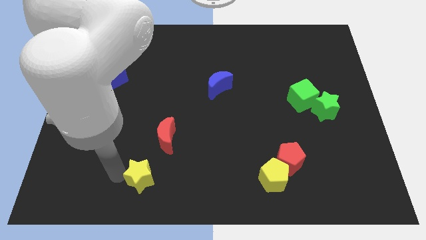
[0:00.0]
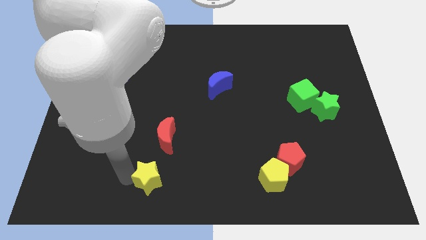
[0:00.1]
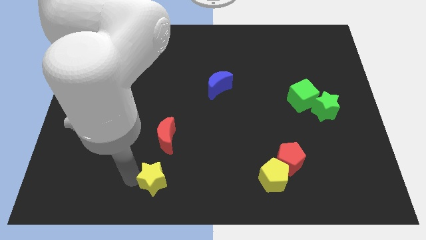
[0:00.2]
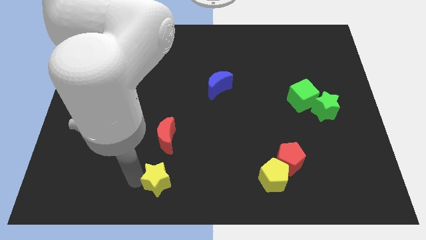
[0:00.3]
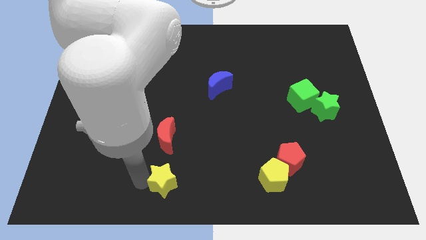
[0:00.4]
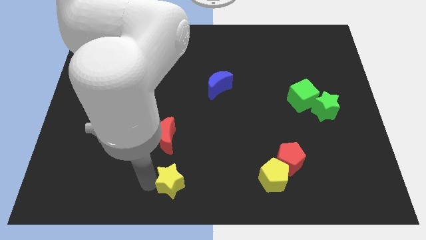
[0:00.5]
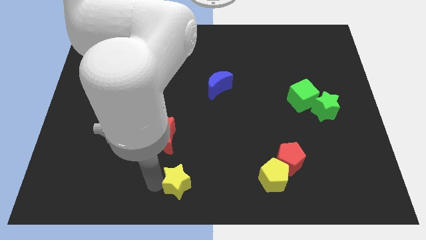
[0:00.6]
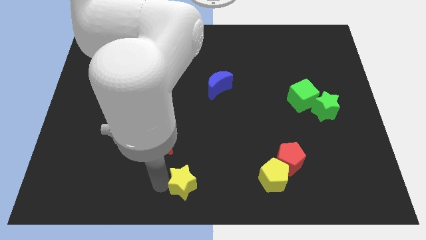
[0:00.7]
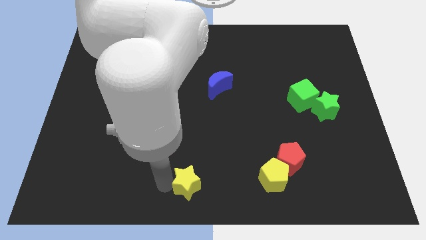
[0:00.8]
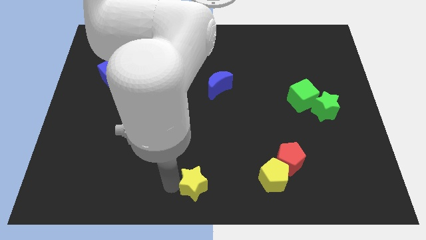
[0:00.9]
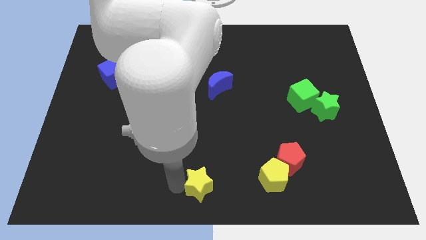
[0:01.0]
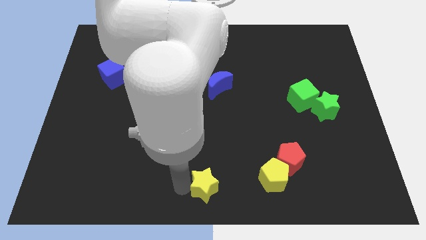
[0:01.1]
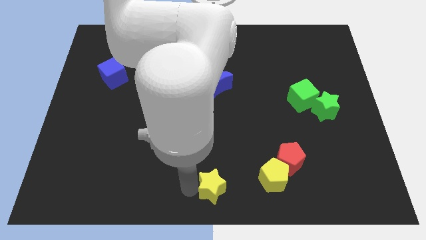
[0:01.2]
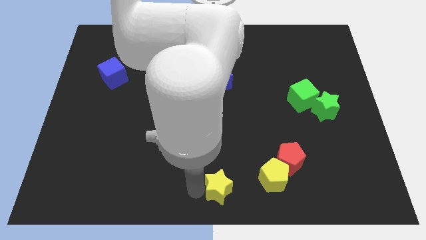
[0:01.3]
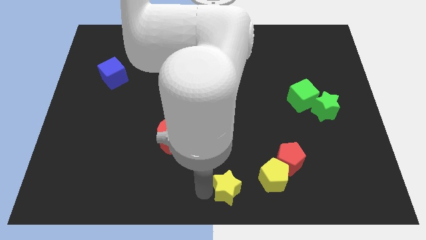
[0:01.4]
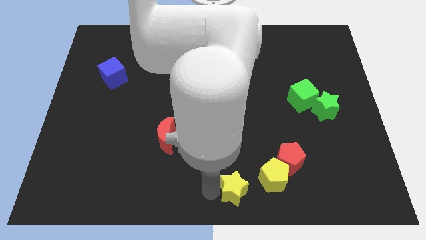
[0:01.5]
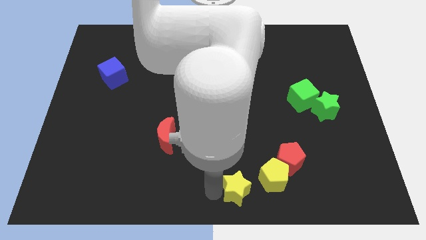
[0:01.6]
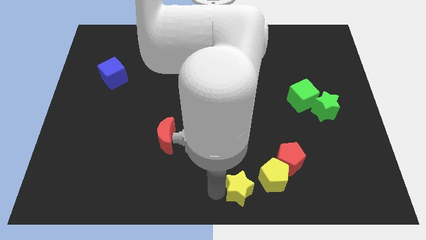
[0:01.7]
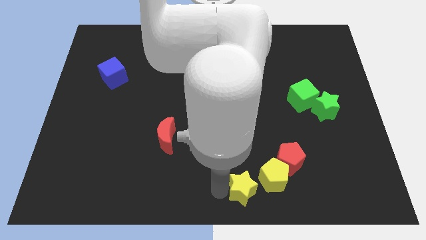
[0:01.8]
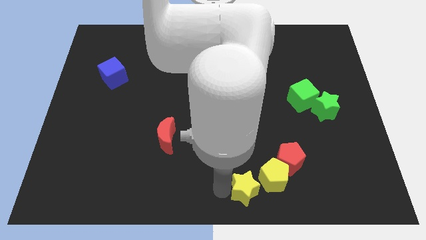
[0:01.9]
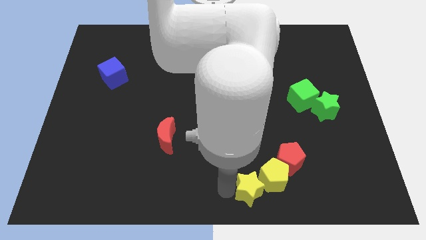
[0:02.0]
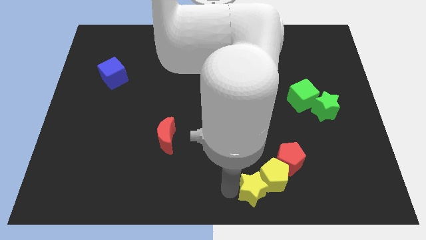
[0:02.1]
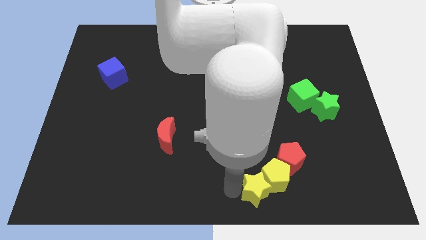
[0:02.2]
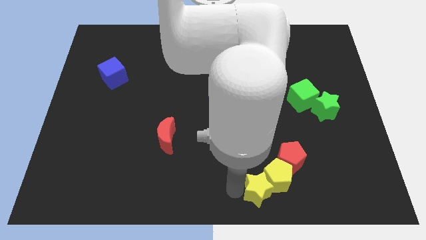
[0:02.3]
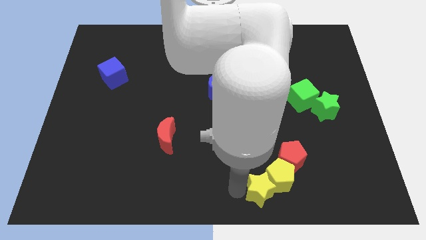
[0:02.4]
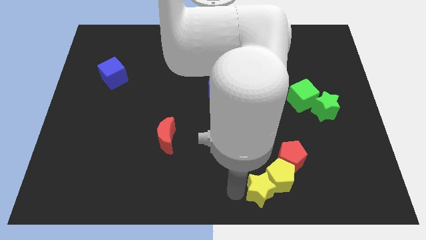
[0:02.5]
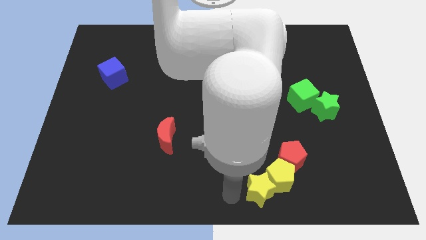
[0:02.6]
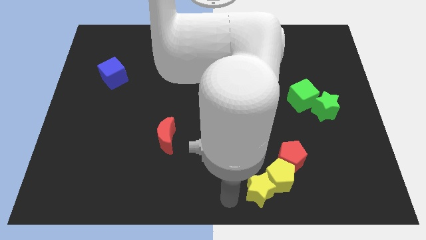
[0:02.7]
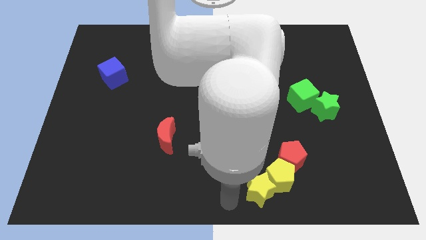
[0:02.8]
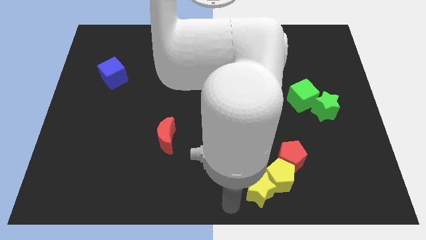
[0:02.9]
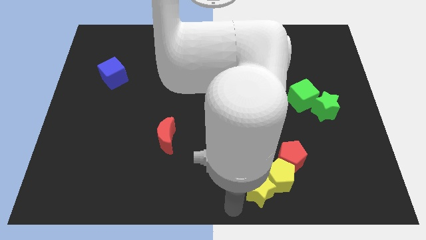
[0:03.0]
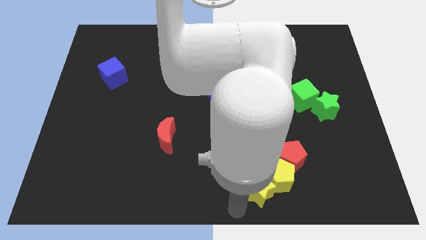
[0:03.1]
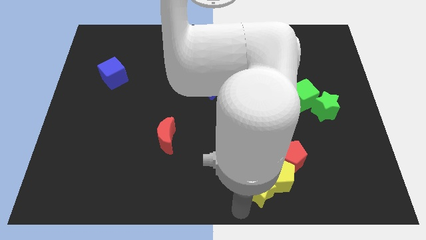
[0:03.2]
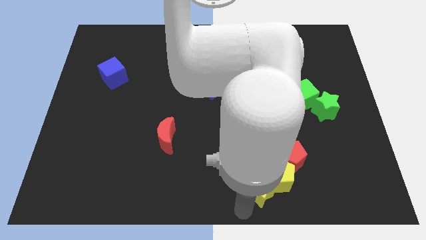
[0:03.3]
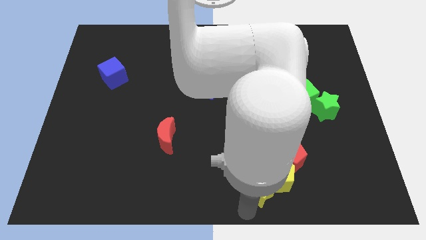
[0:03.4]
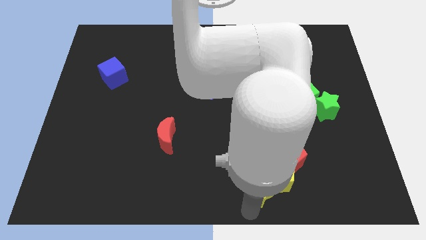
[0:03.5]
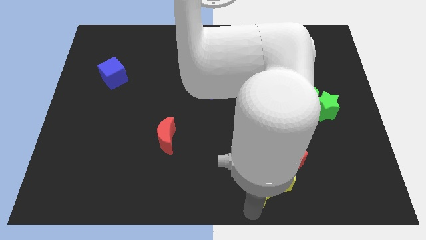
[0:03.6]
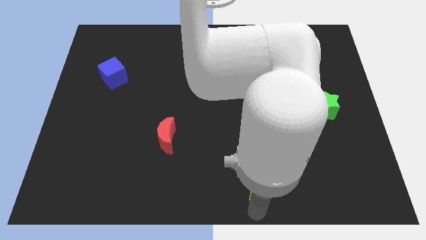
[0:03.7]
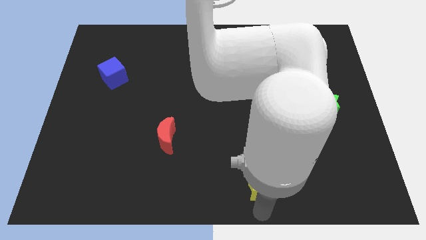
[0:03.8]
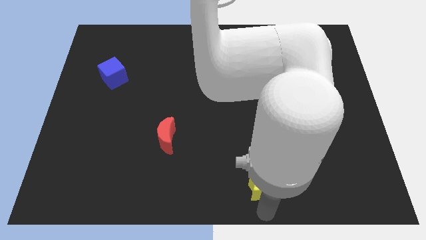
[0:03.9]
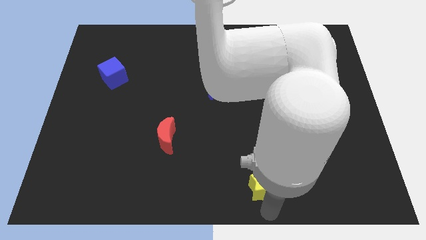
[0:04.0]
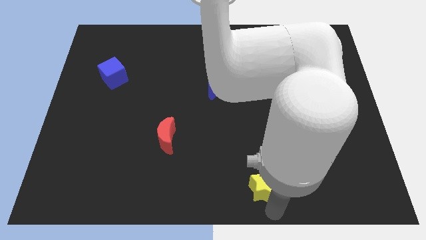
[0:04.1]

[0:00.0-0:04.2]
move the yellow star into the yellow pentagon

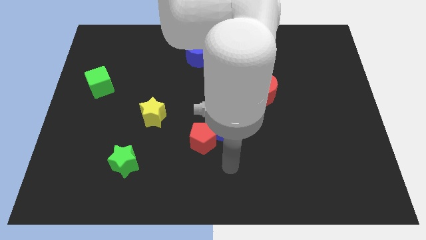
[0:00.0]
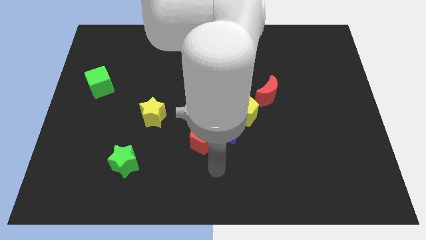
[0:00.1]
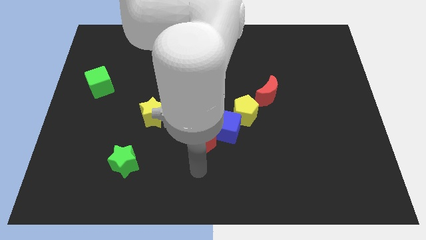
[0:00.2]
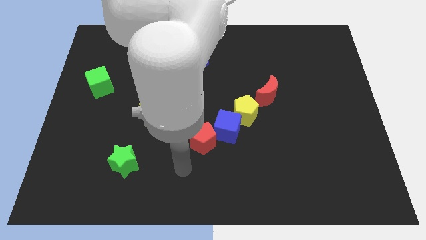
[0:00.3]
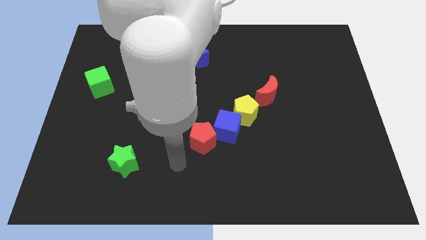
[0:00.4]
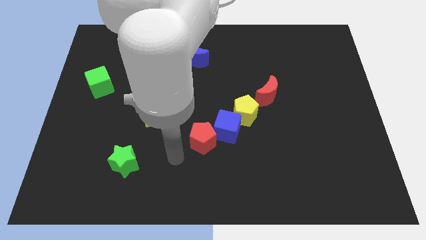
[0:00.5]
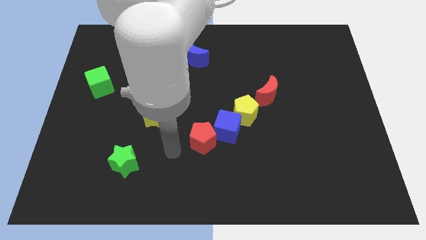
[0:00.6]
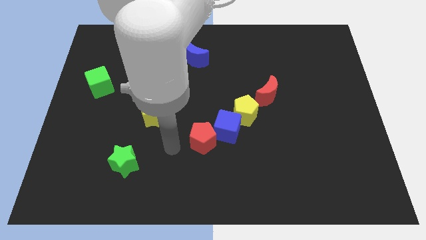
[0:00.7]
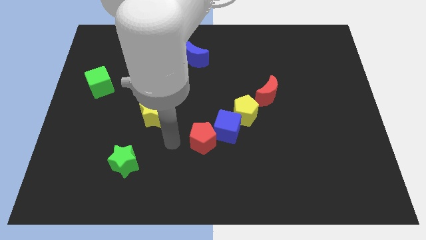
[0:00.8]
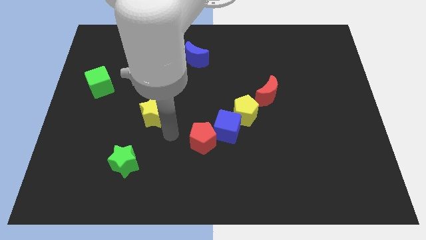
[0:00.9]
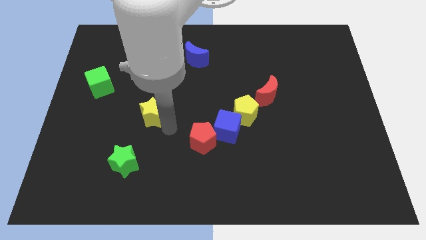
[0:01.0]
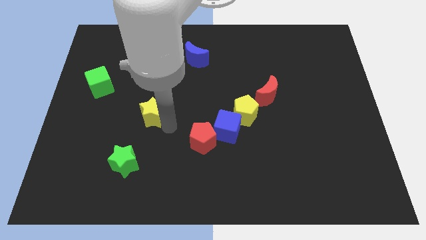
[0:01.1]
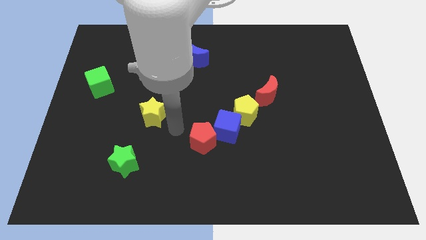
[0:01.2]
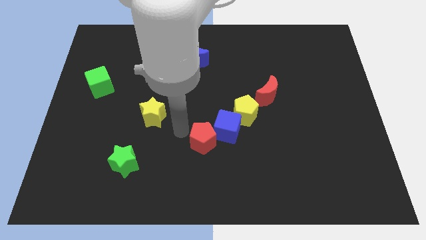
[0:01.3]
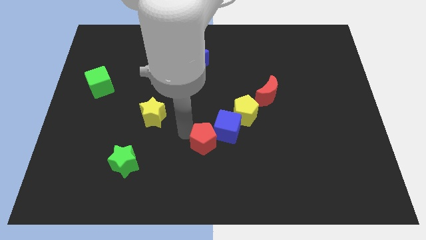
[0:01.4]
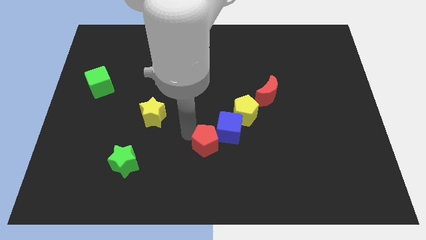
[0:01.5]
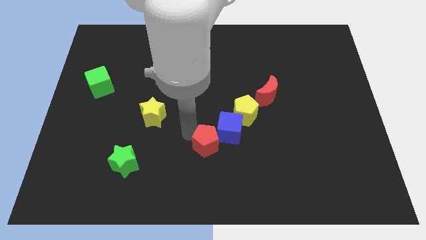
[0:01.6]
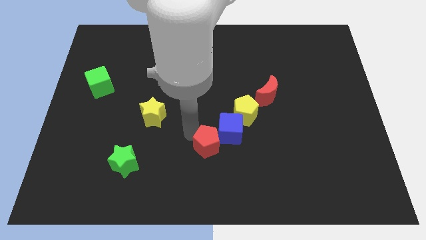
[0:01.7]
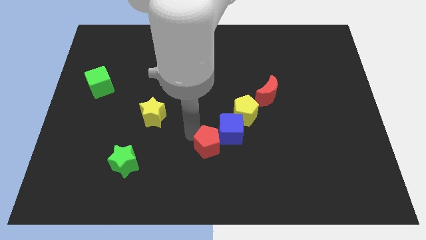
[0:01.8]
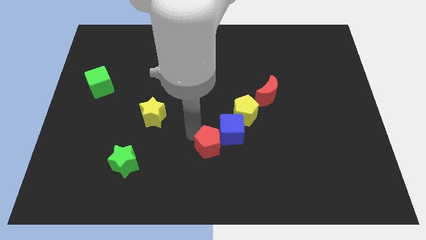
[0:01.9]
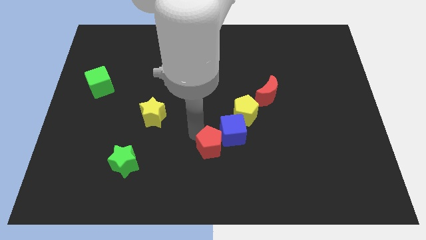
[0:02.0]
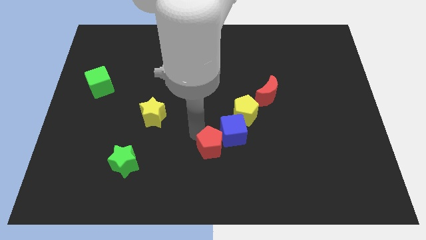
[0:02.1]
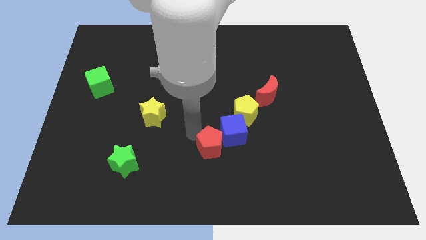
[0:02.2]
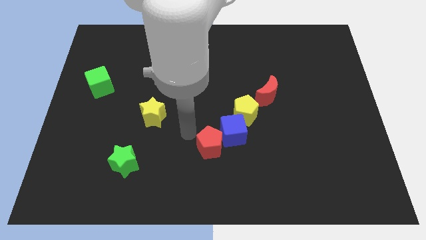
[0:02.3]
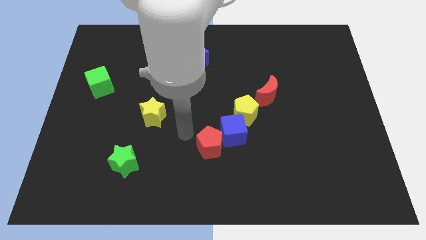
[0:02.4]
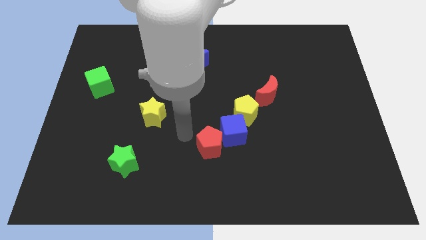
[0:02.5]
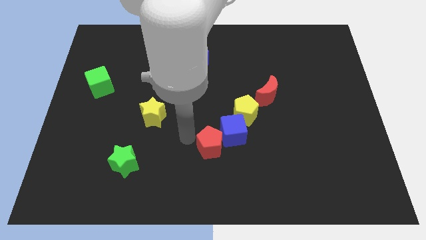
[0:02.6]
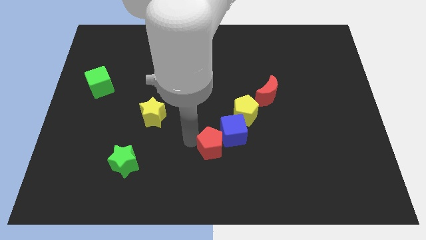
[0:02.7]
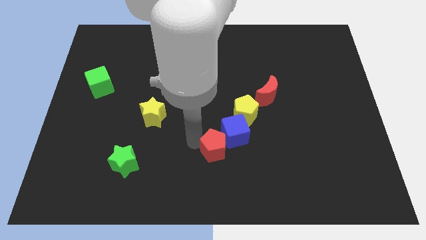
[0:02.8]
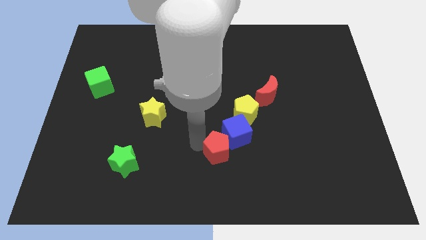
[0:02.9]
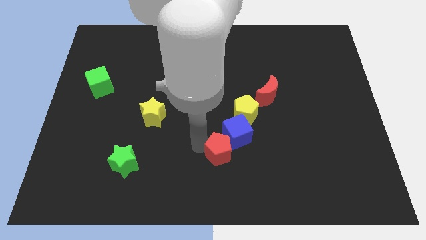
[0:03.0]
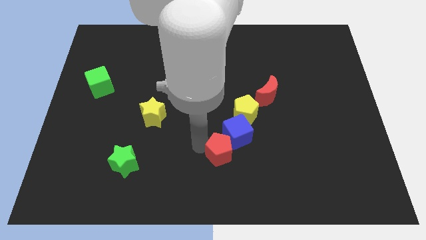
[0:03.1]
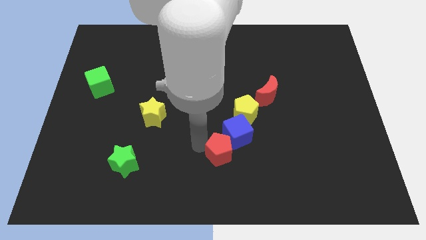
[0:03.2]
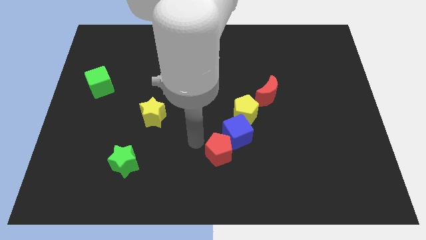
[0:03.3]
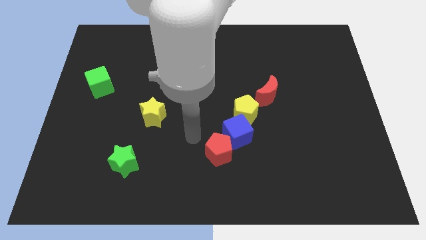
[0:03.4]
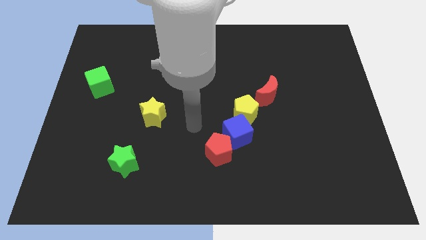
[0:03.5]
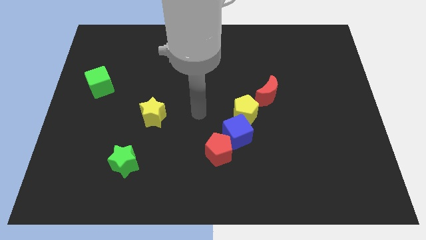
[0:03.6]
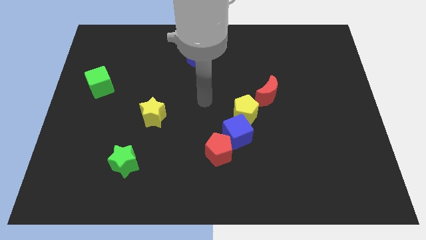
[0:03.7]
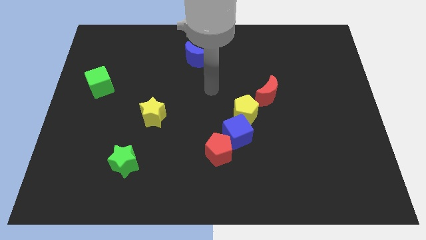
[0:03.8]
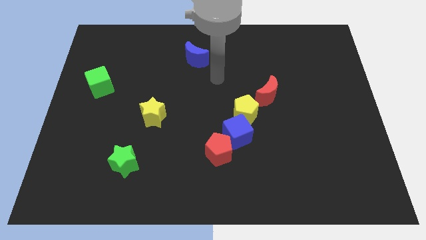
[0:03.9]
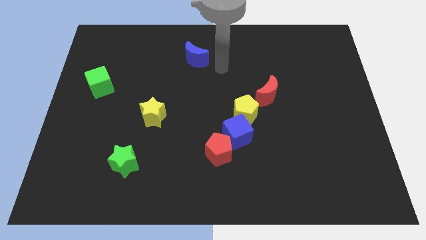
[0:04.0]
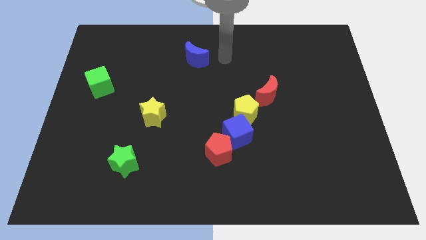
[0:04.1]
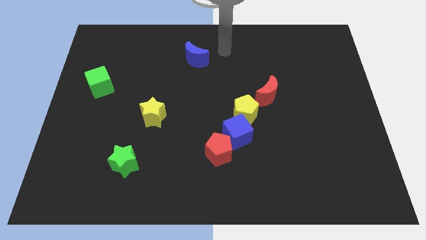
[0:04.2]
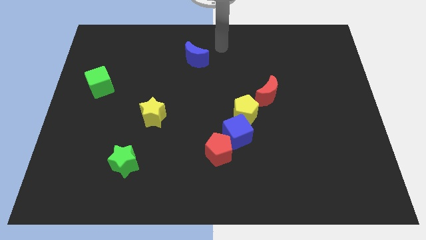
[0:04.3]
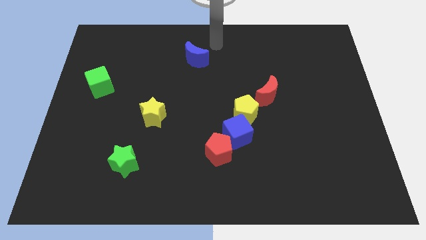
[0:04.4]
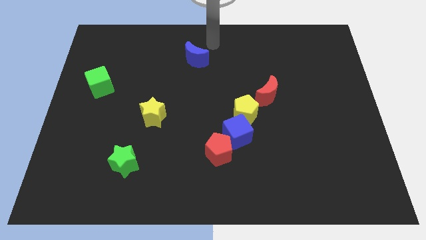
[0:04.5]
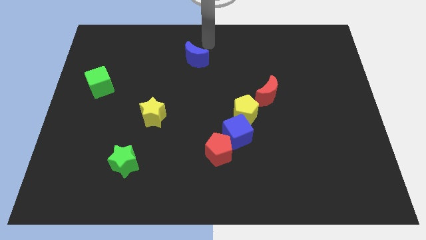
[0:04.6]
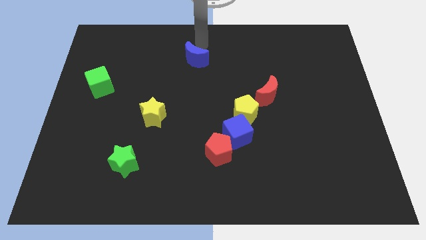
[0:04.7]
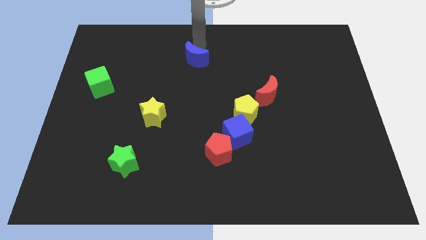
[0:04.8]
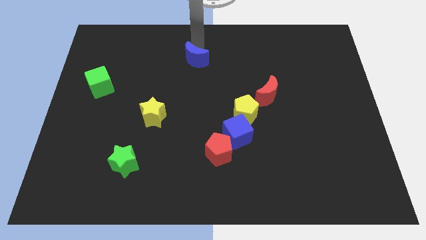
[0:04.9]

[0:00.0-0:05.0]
adjust the red pentagon slightly to the bottom left of the blue cube

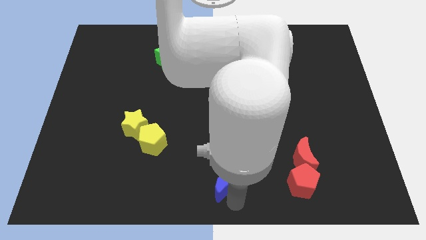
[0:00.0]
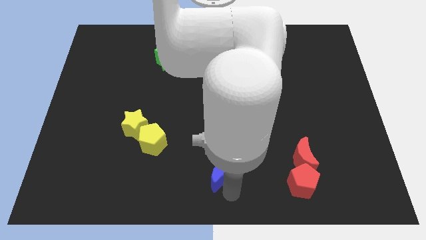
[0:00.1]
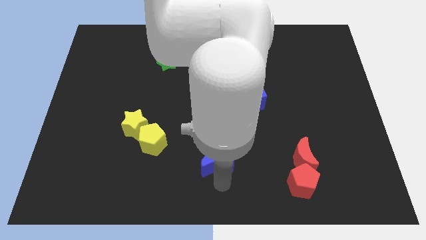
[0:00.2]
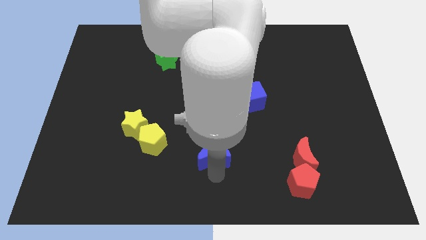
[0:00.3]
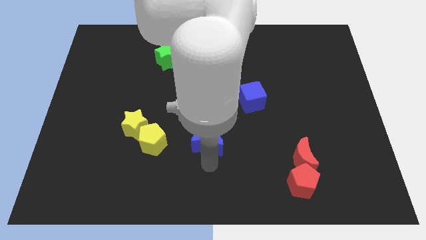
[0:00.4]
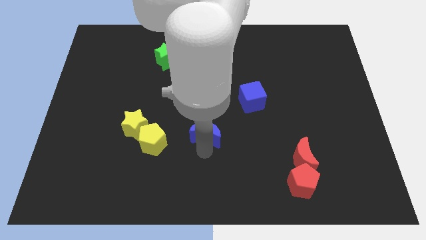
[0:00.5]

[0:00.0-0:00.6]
push the blue crescent to the top
